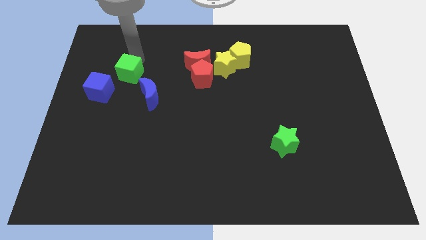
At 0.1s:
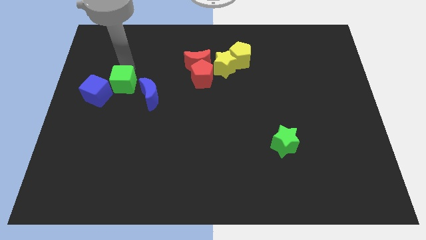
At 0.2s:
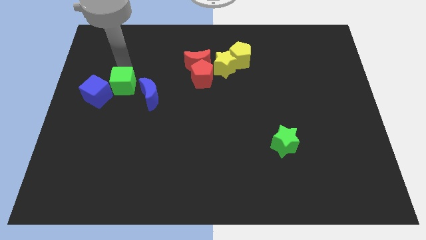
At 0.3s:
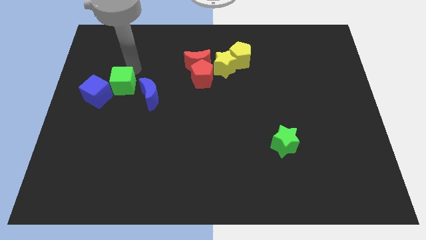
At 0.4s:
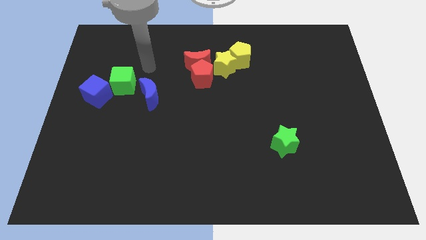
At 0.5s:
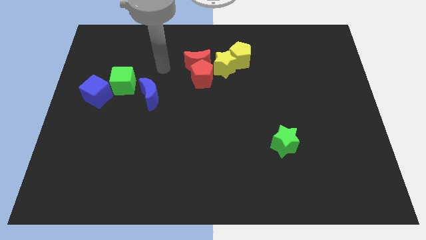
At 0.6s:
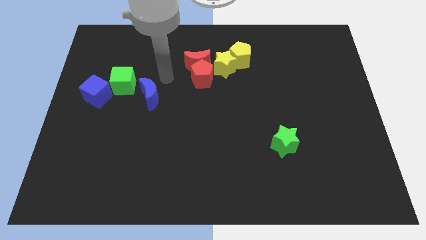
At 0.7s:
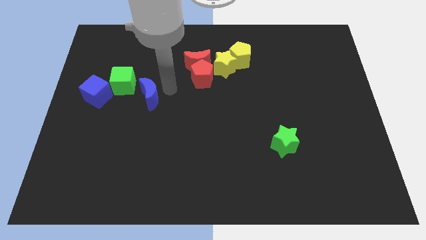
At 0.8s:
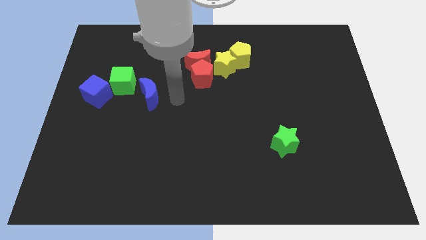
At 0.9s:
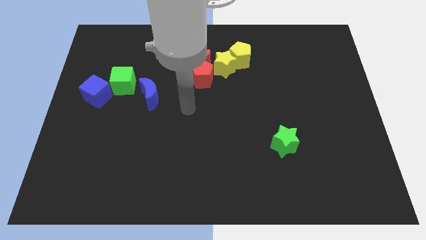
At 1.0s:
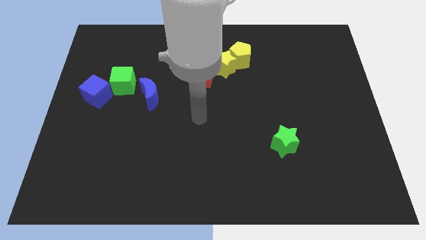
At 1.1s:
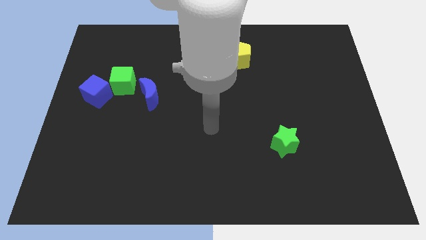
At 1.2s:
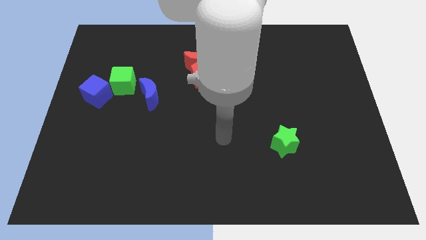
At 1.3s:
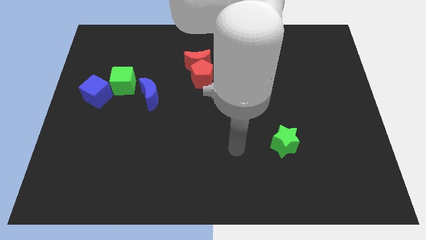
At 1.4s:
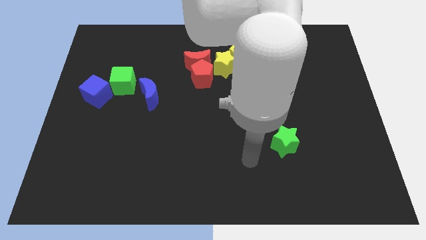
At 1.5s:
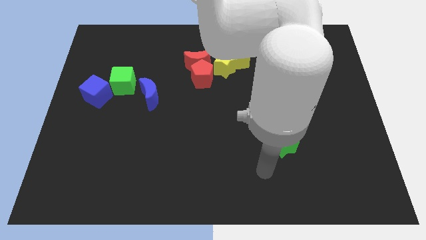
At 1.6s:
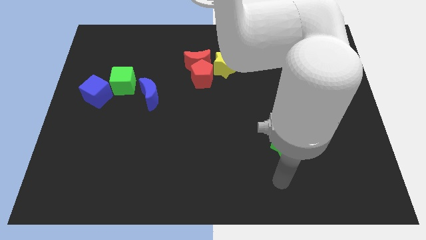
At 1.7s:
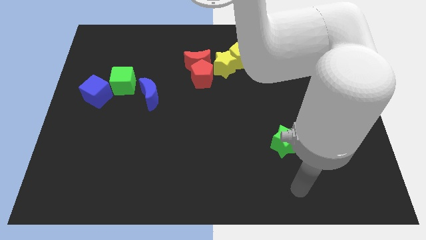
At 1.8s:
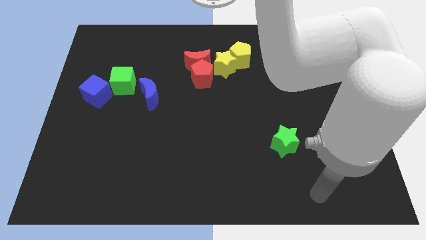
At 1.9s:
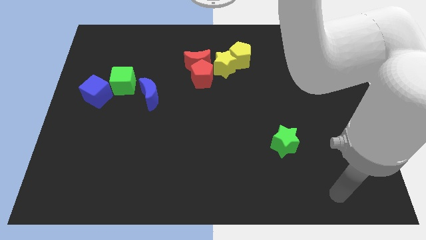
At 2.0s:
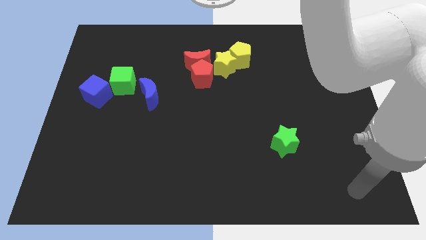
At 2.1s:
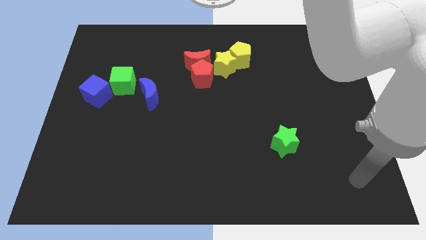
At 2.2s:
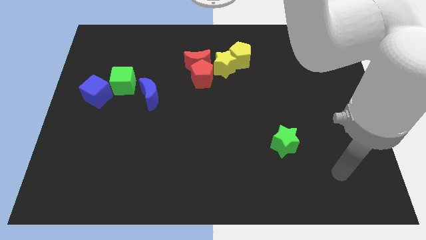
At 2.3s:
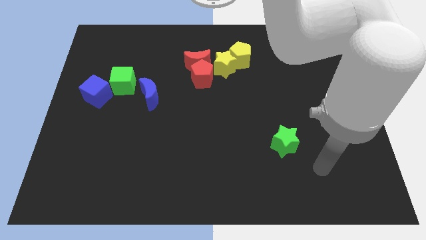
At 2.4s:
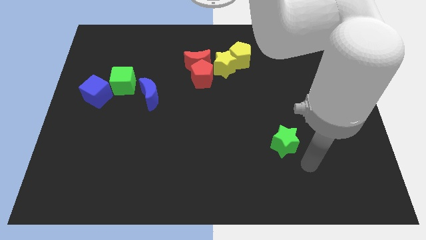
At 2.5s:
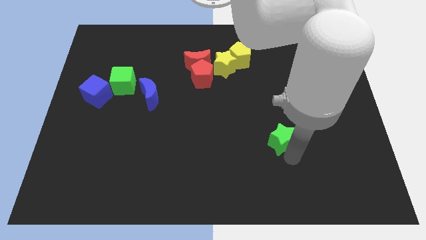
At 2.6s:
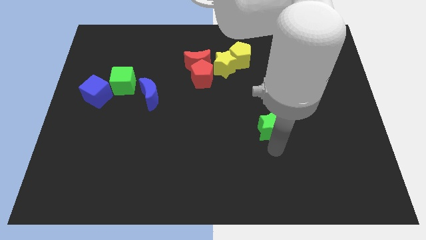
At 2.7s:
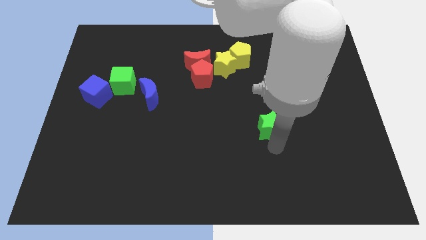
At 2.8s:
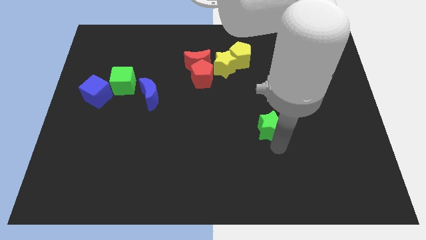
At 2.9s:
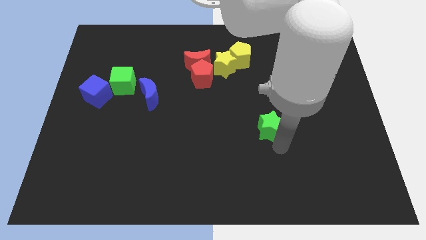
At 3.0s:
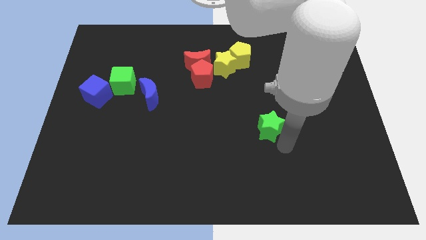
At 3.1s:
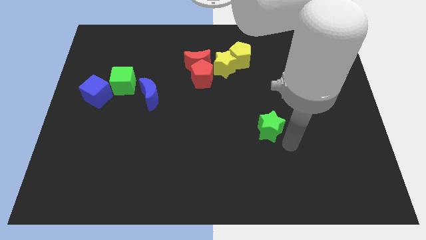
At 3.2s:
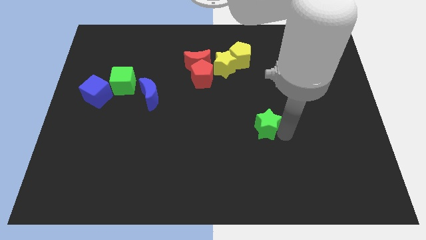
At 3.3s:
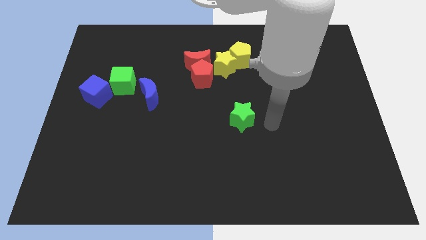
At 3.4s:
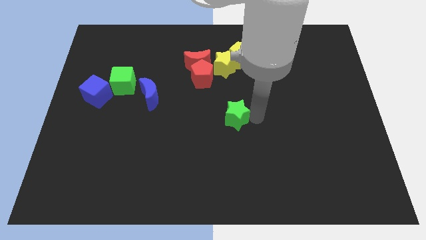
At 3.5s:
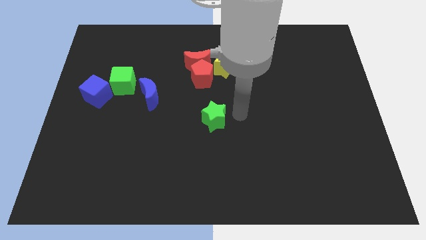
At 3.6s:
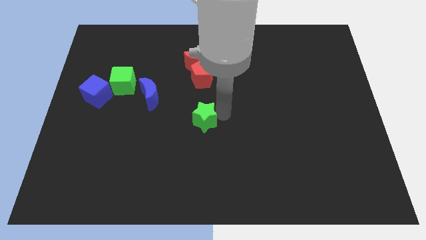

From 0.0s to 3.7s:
move the green cube towards the blue cube

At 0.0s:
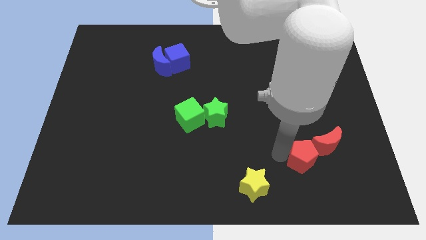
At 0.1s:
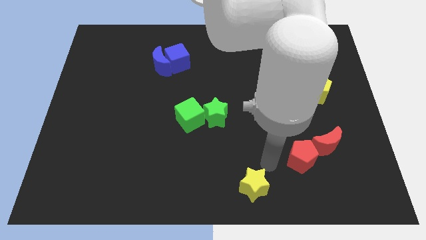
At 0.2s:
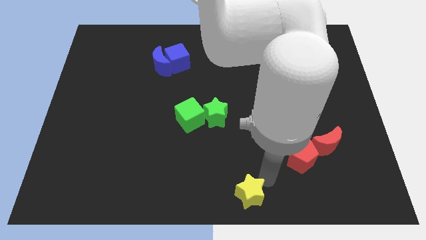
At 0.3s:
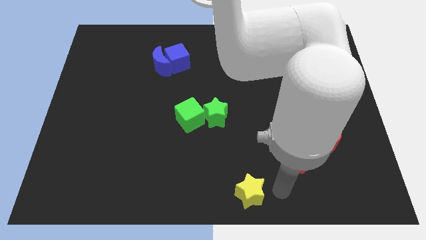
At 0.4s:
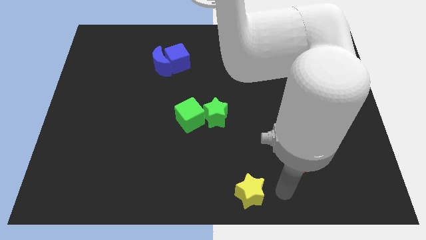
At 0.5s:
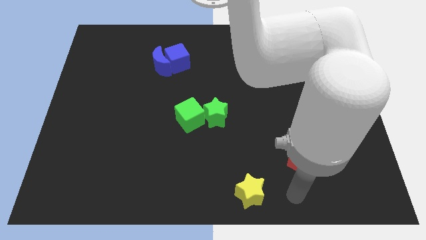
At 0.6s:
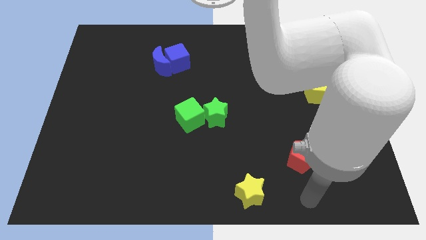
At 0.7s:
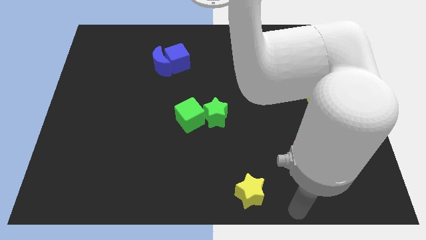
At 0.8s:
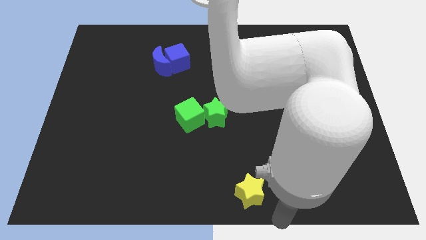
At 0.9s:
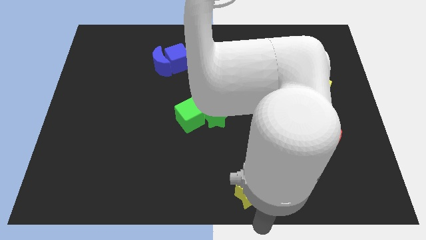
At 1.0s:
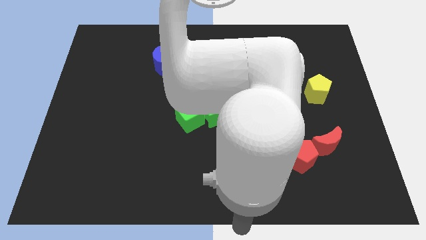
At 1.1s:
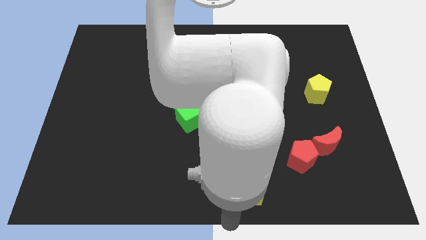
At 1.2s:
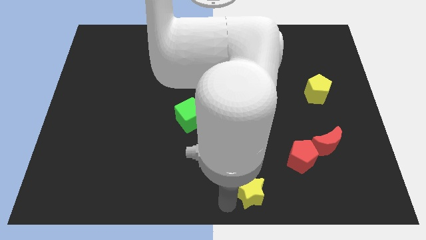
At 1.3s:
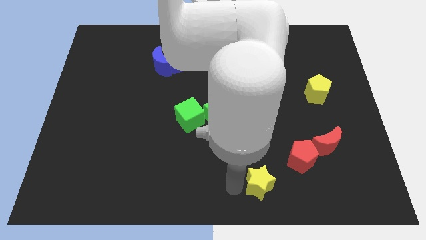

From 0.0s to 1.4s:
touch the yellow star with your arm

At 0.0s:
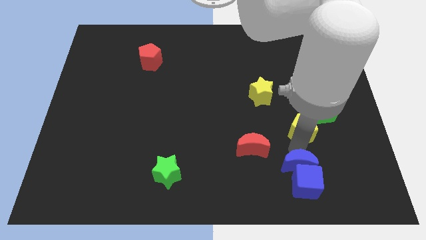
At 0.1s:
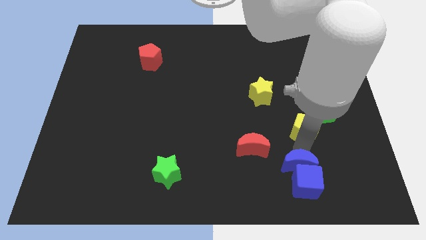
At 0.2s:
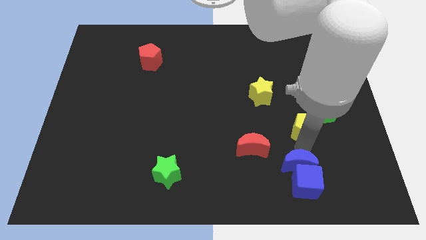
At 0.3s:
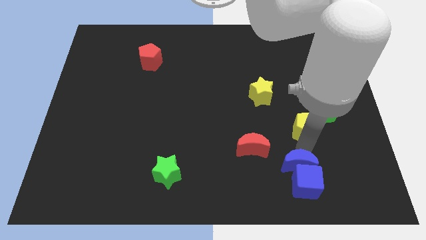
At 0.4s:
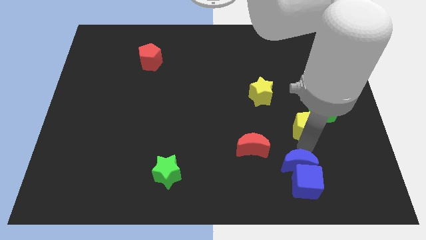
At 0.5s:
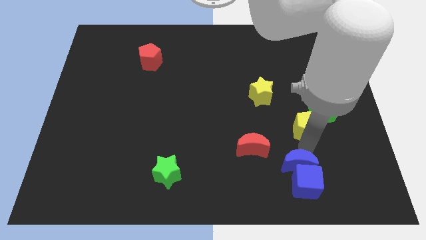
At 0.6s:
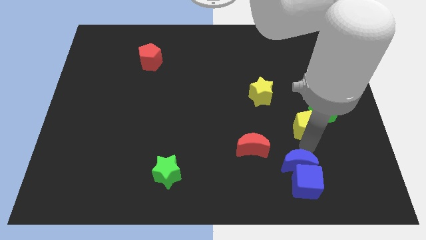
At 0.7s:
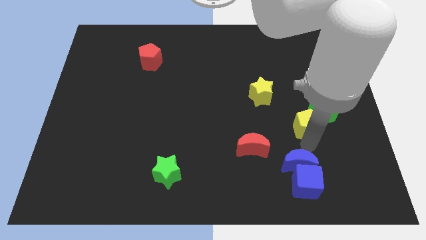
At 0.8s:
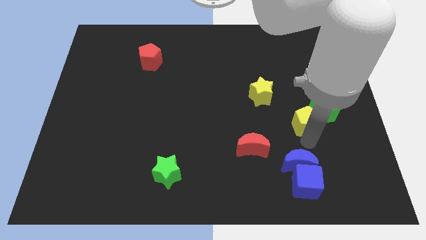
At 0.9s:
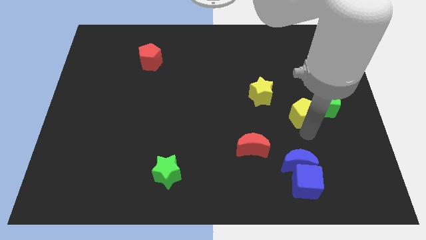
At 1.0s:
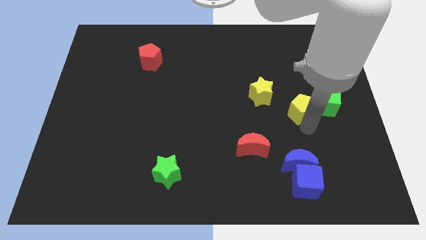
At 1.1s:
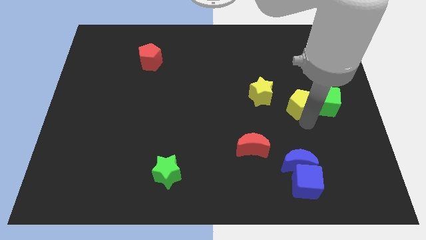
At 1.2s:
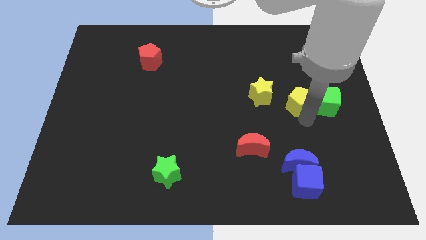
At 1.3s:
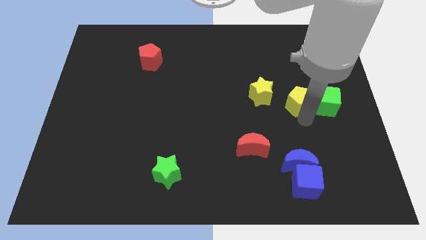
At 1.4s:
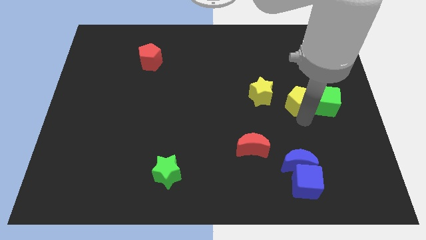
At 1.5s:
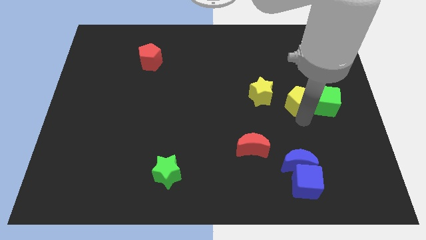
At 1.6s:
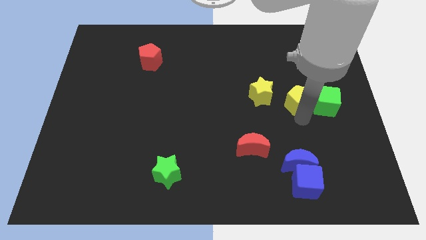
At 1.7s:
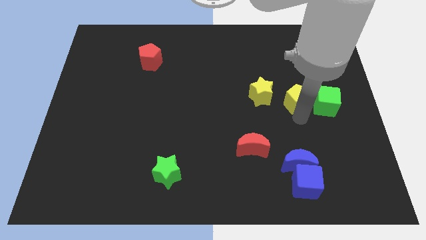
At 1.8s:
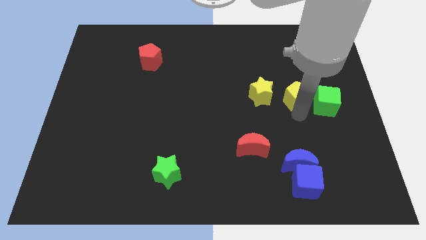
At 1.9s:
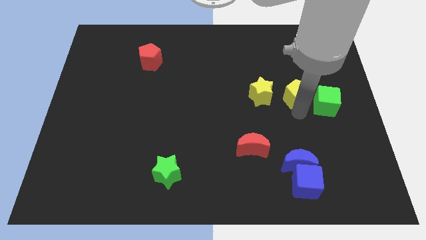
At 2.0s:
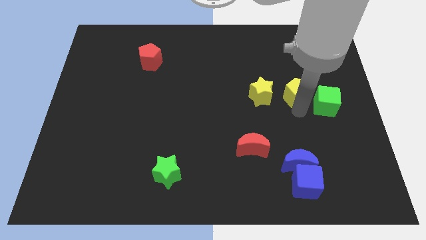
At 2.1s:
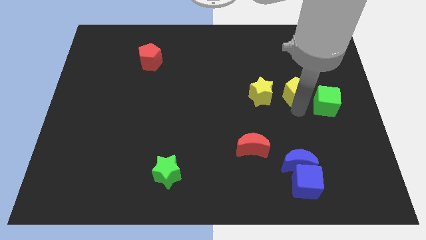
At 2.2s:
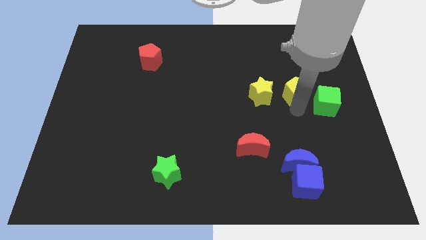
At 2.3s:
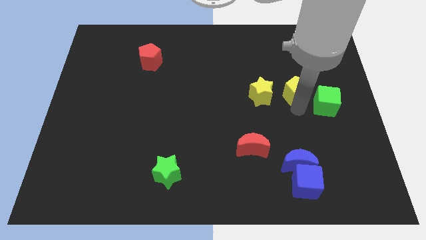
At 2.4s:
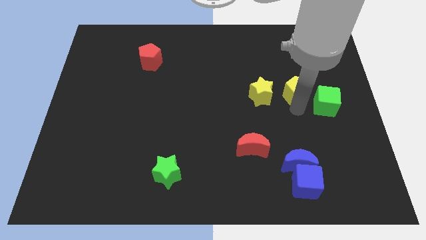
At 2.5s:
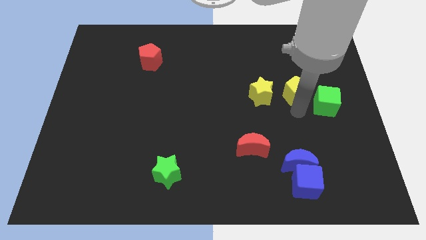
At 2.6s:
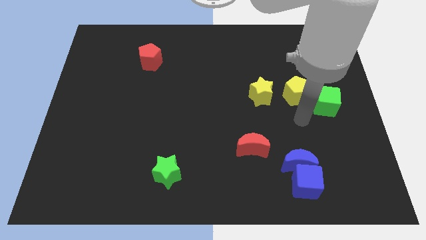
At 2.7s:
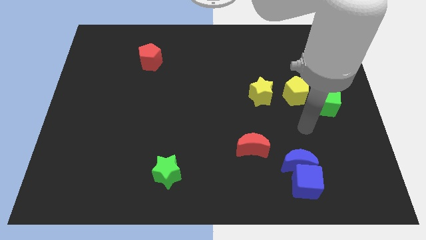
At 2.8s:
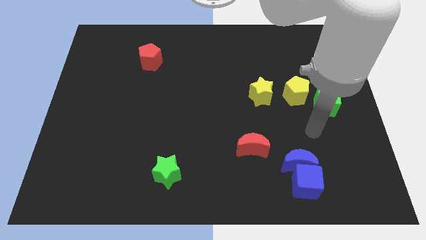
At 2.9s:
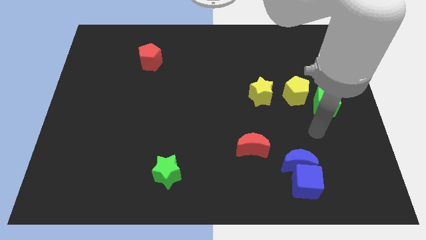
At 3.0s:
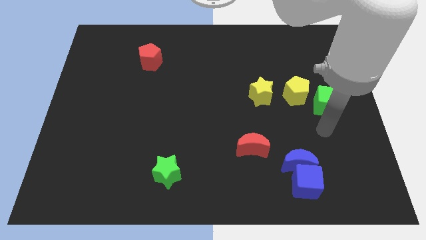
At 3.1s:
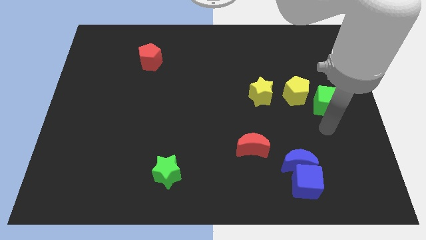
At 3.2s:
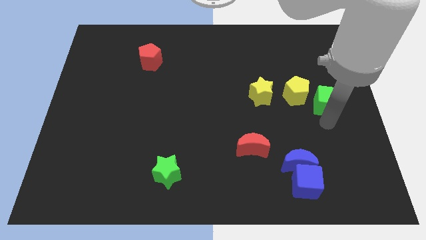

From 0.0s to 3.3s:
place the yellow pentagon in between the yellow star and green cube

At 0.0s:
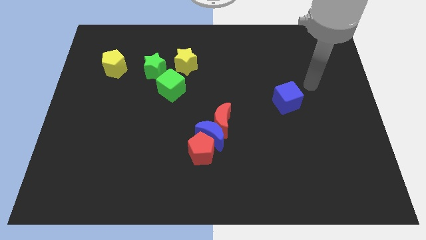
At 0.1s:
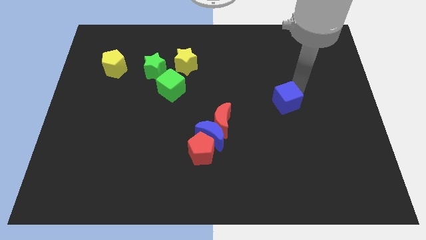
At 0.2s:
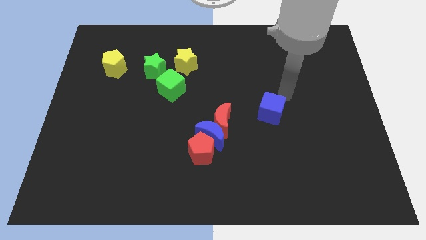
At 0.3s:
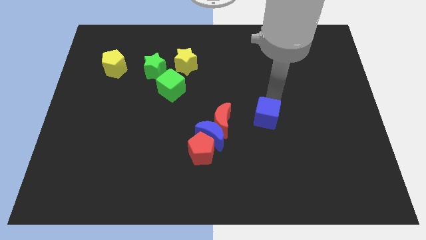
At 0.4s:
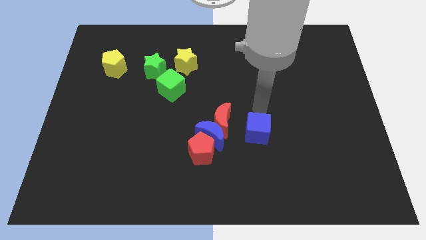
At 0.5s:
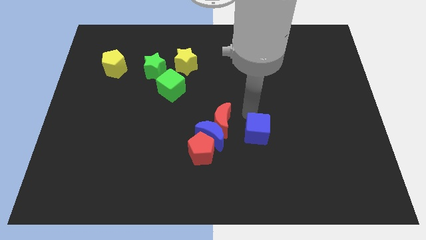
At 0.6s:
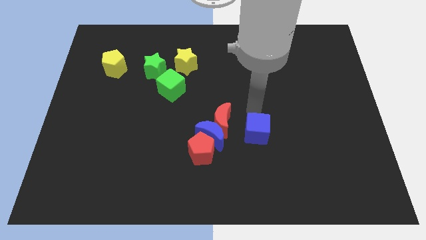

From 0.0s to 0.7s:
place the blue cube right to the red moon

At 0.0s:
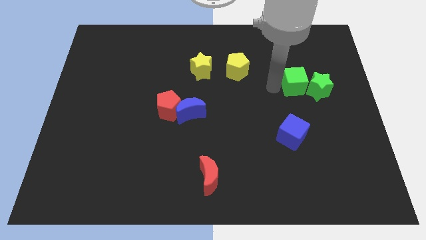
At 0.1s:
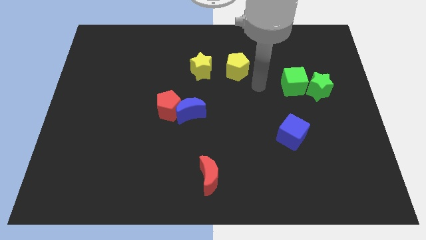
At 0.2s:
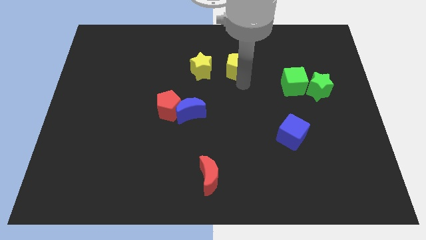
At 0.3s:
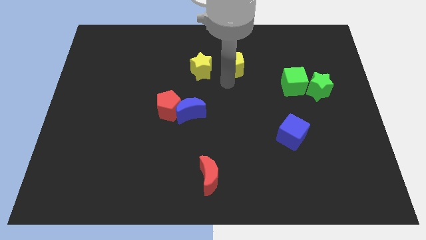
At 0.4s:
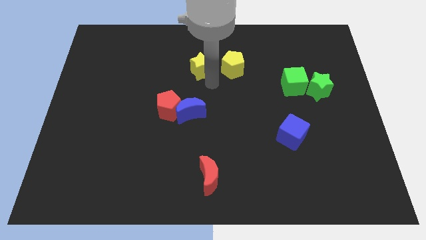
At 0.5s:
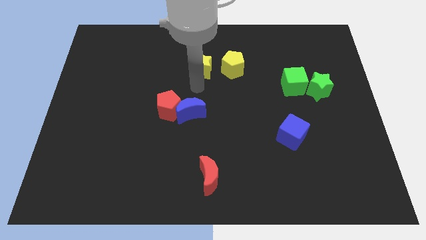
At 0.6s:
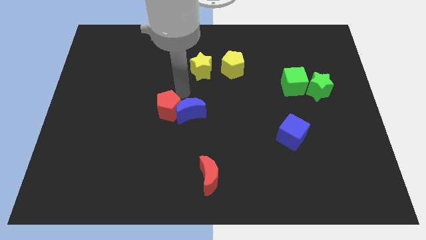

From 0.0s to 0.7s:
place your arm to the top of red pentagon
